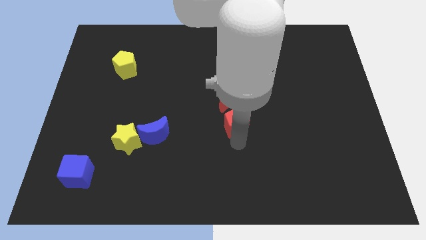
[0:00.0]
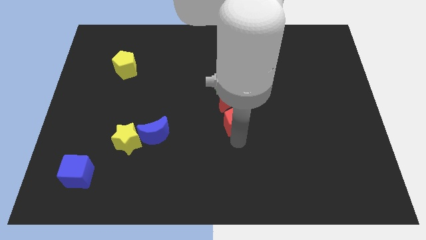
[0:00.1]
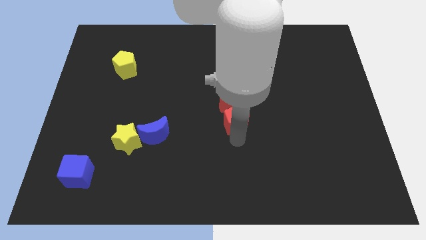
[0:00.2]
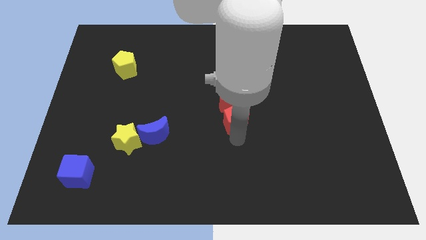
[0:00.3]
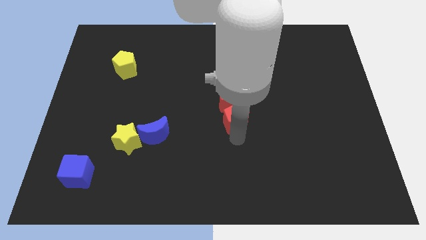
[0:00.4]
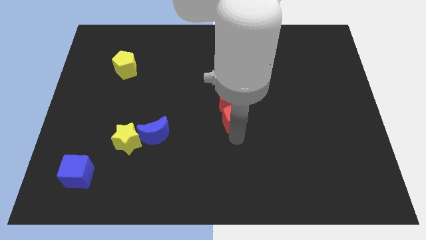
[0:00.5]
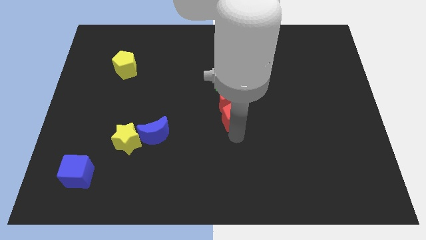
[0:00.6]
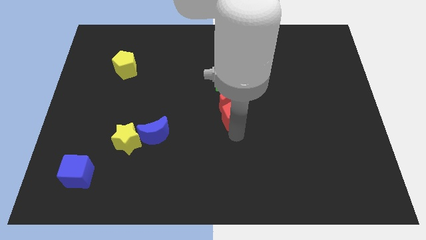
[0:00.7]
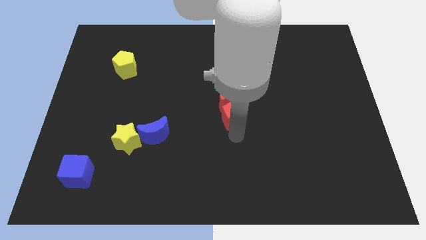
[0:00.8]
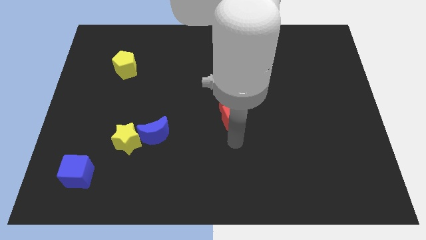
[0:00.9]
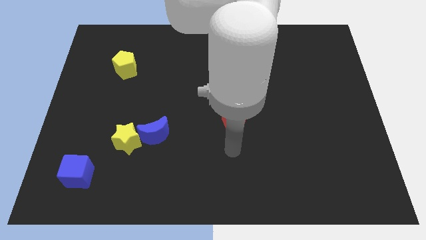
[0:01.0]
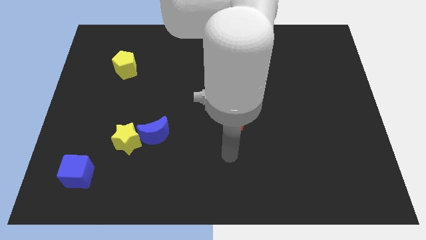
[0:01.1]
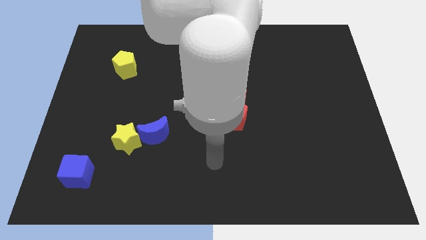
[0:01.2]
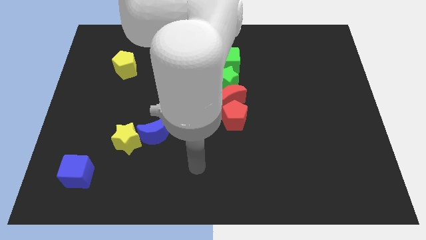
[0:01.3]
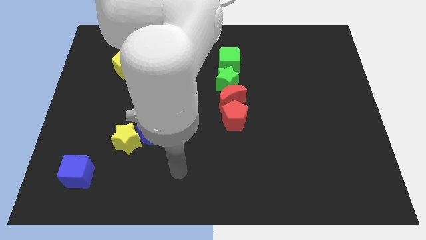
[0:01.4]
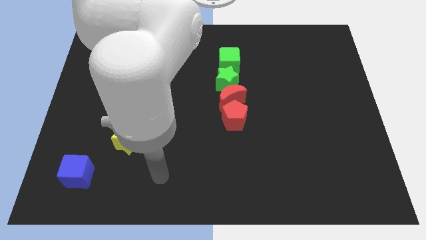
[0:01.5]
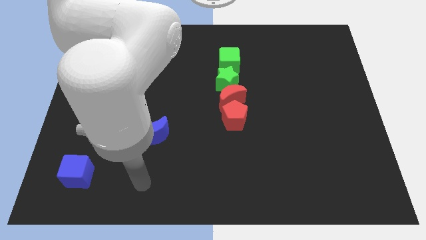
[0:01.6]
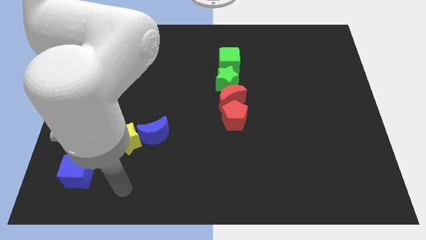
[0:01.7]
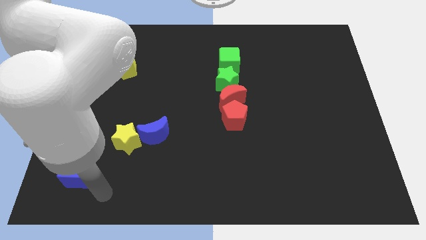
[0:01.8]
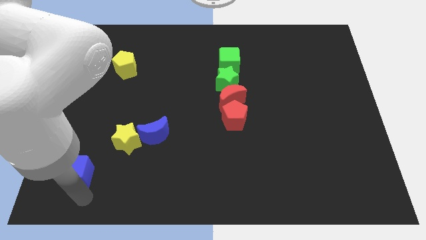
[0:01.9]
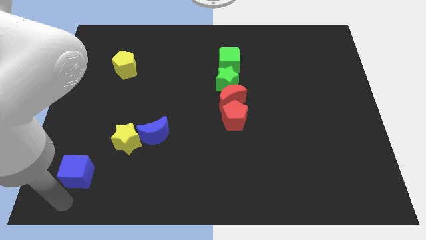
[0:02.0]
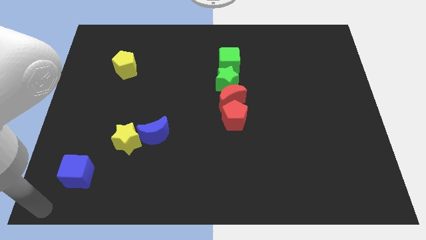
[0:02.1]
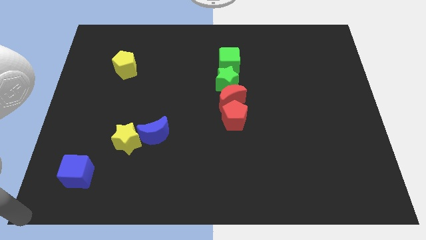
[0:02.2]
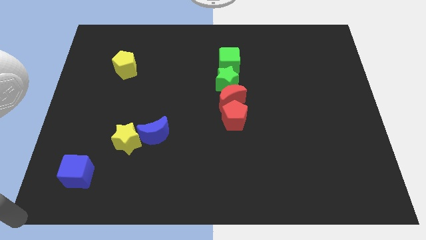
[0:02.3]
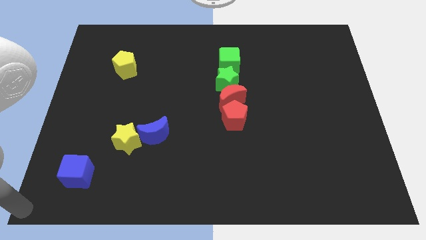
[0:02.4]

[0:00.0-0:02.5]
go and point your hand at the bottom left corner of the board

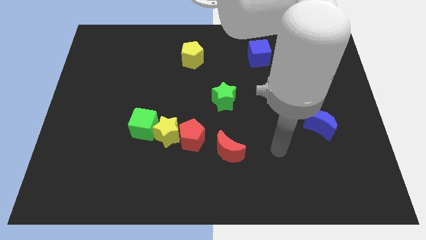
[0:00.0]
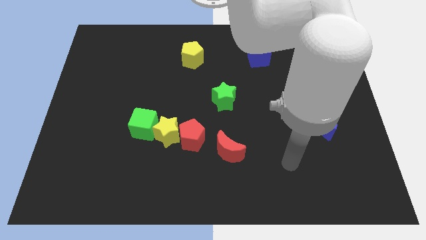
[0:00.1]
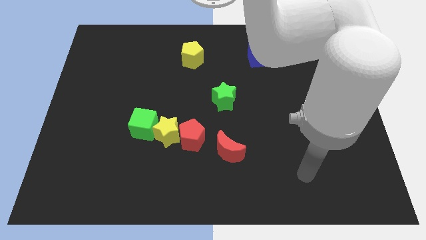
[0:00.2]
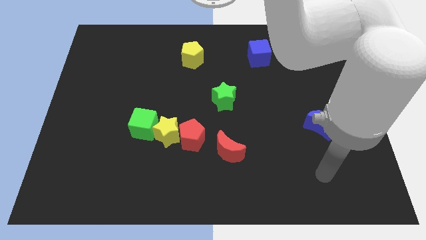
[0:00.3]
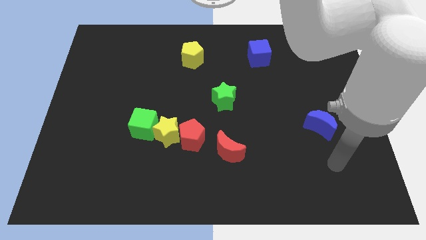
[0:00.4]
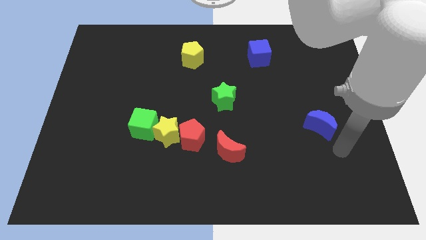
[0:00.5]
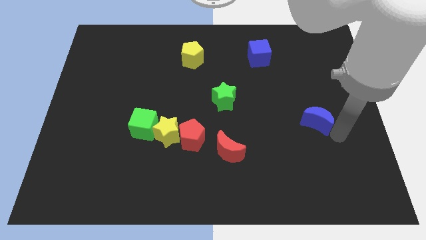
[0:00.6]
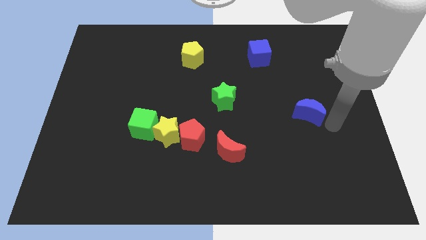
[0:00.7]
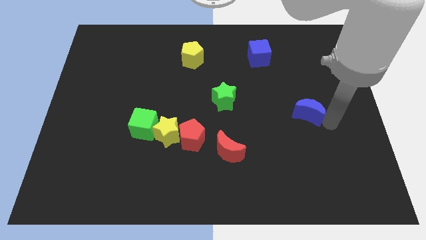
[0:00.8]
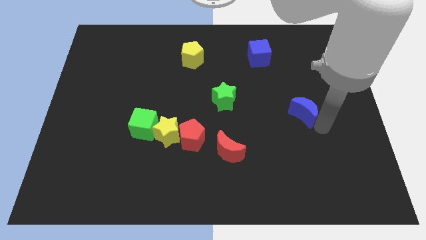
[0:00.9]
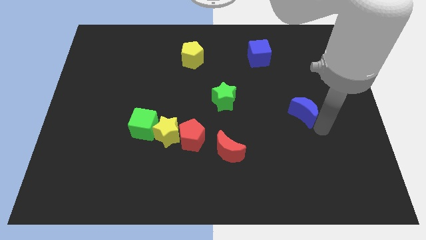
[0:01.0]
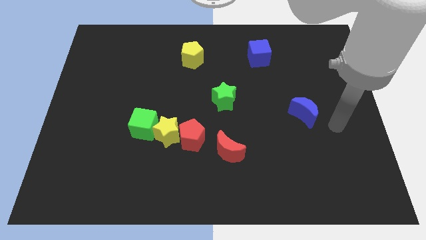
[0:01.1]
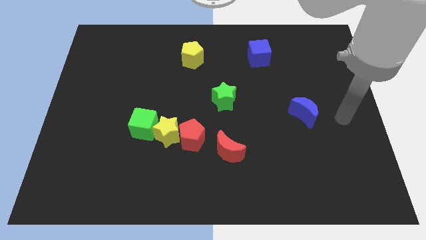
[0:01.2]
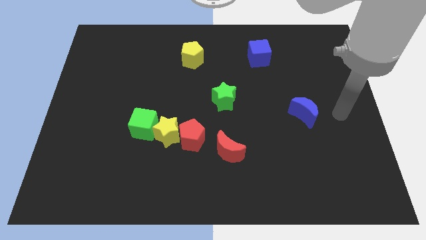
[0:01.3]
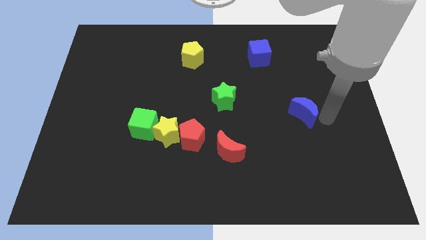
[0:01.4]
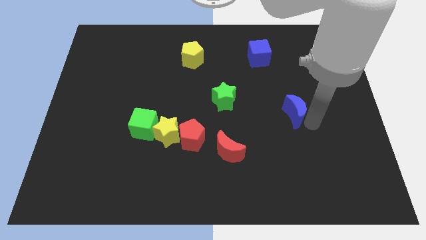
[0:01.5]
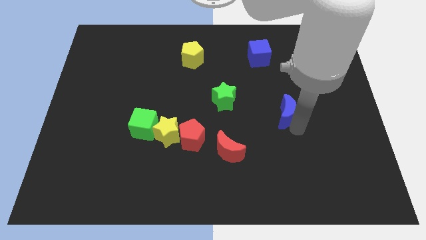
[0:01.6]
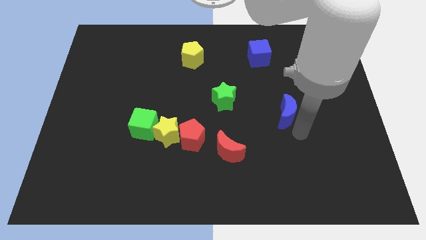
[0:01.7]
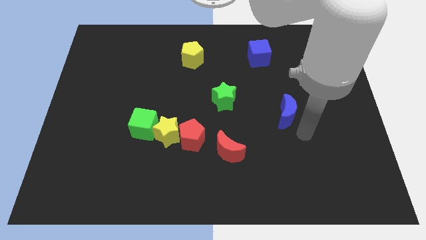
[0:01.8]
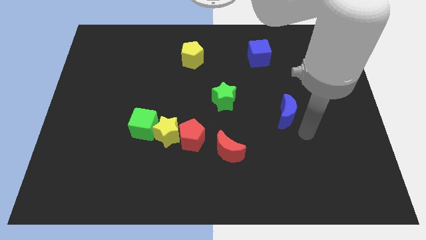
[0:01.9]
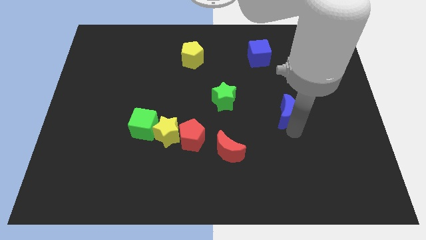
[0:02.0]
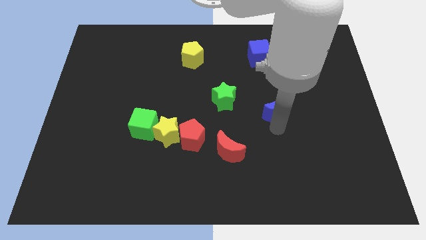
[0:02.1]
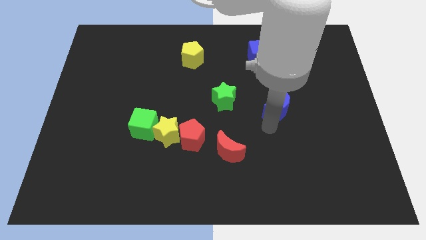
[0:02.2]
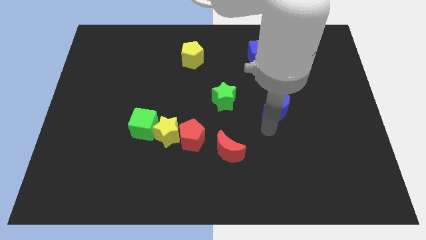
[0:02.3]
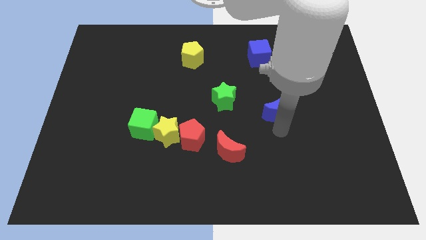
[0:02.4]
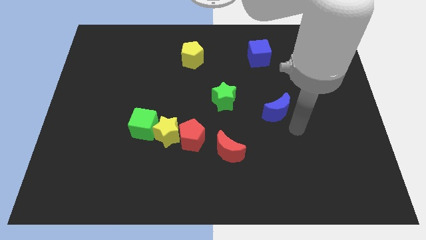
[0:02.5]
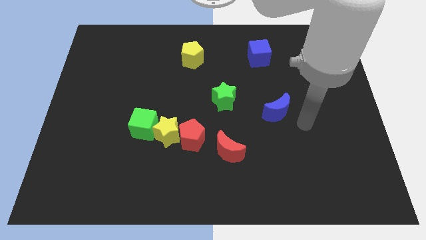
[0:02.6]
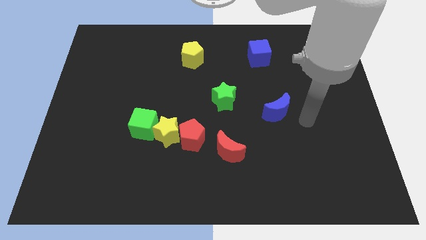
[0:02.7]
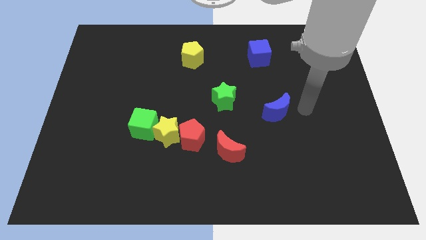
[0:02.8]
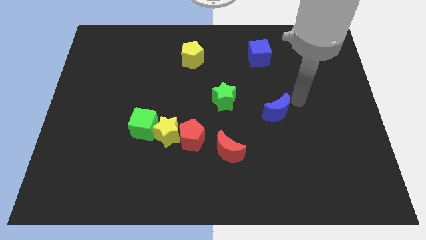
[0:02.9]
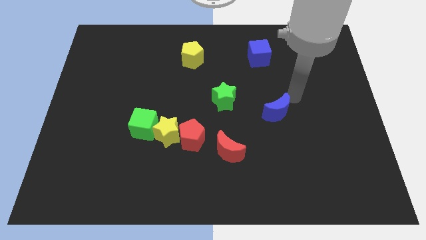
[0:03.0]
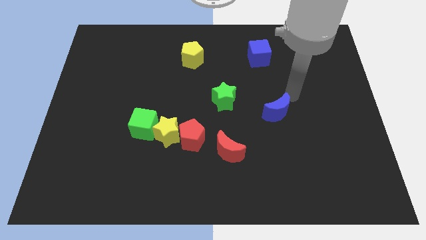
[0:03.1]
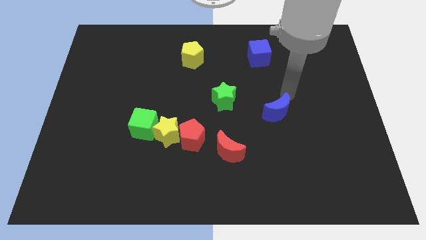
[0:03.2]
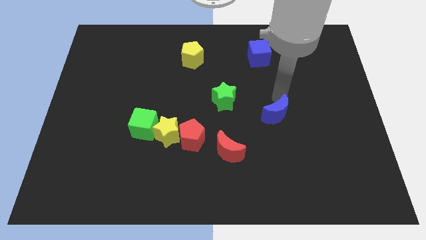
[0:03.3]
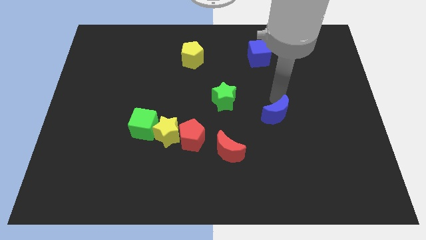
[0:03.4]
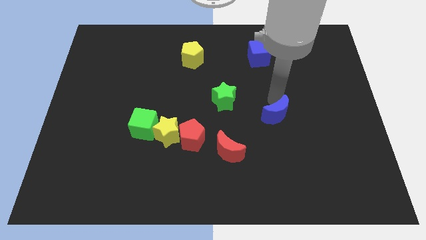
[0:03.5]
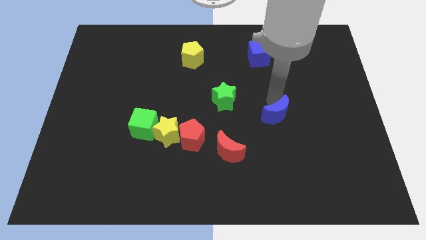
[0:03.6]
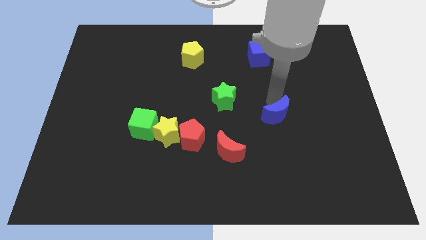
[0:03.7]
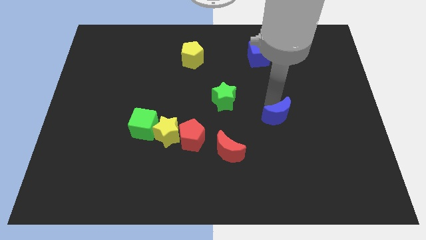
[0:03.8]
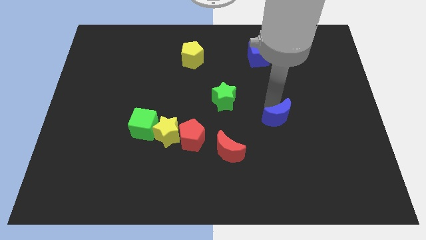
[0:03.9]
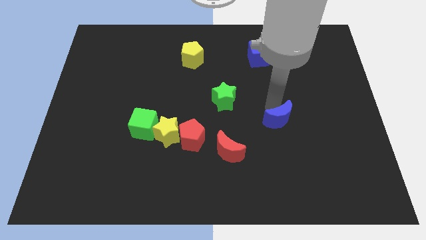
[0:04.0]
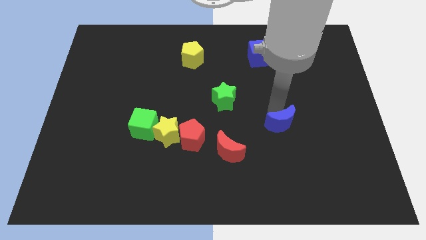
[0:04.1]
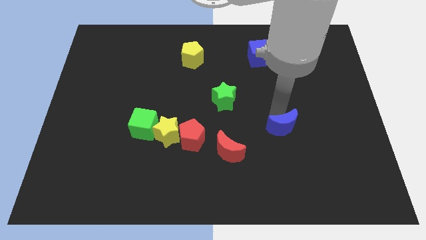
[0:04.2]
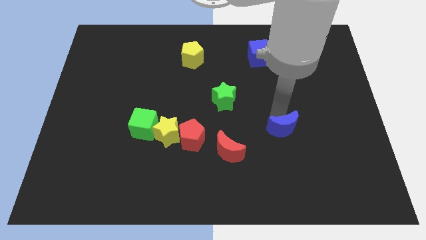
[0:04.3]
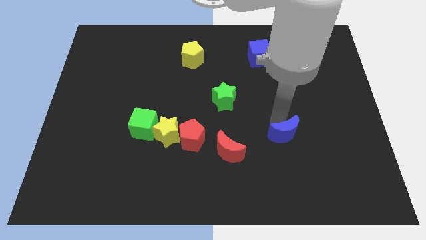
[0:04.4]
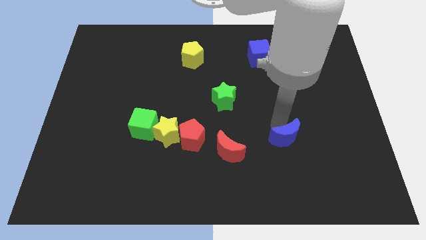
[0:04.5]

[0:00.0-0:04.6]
move the blue moon towards the bottom right

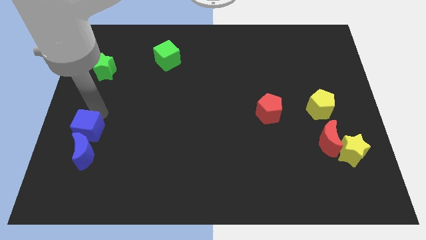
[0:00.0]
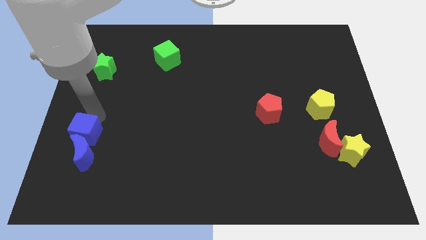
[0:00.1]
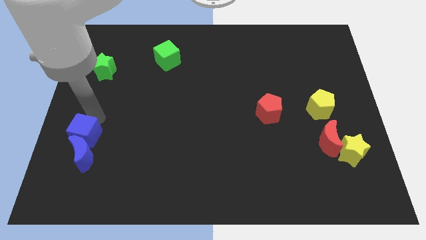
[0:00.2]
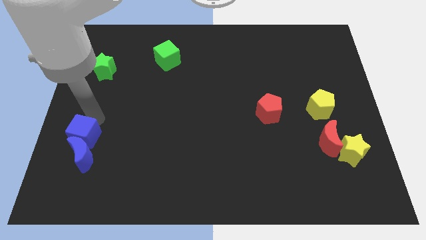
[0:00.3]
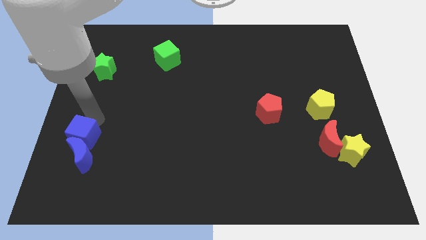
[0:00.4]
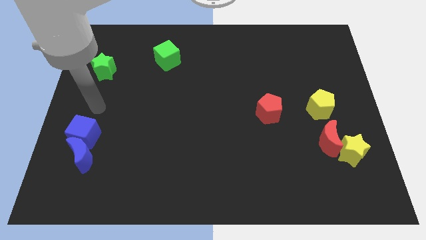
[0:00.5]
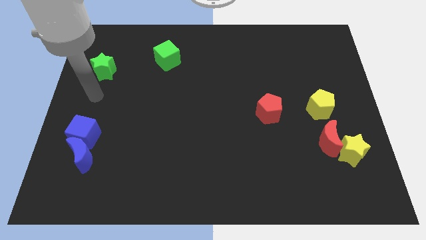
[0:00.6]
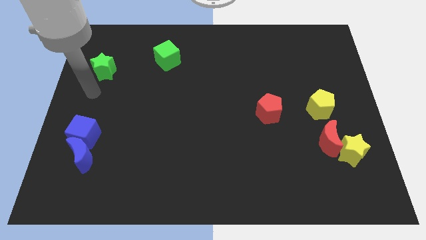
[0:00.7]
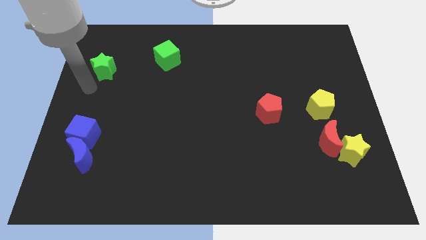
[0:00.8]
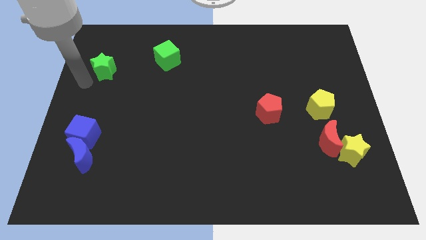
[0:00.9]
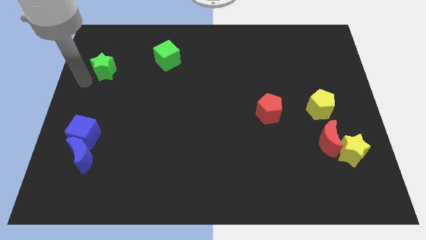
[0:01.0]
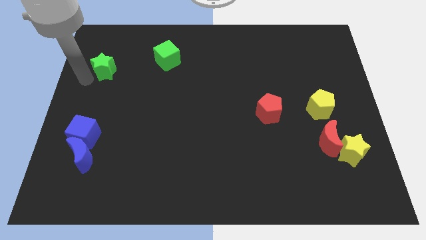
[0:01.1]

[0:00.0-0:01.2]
move blue blocks slightly down

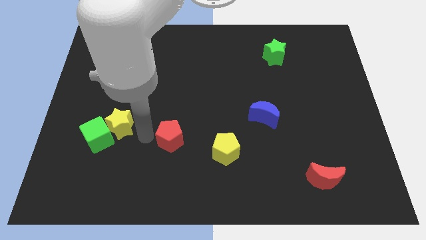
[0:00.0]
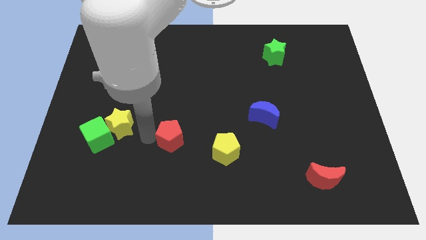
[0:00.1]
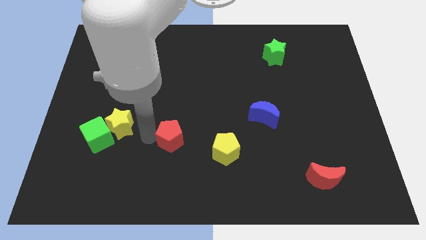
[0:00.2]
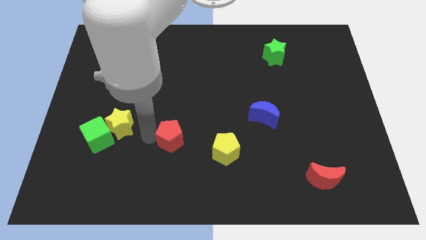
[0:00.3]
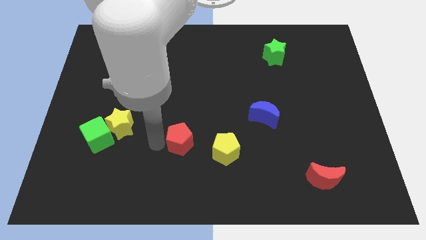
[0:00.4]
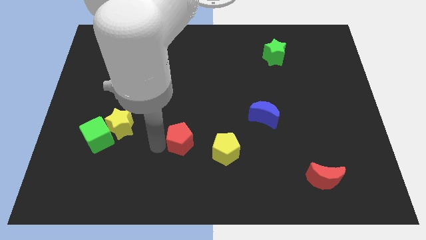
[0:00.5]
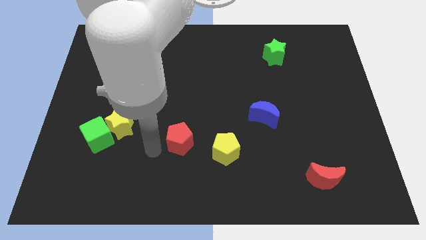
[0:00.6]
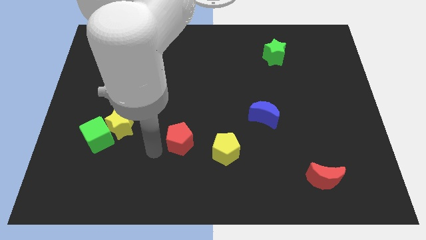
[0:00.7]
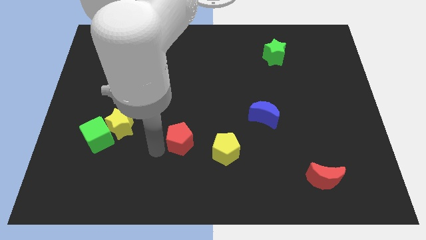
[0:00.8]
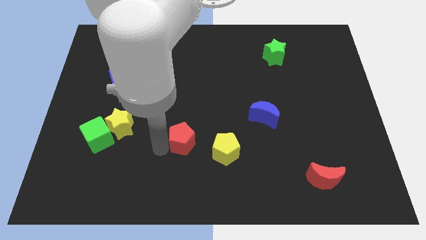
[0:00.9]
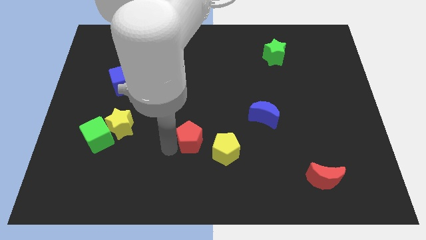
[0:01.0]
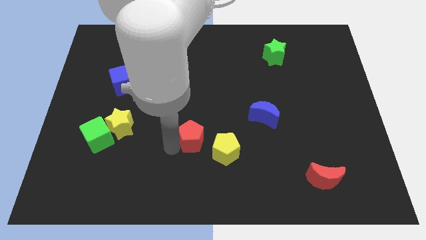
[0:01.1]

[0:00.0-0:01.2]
push the red pentagon slightly to the right
